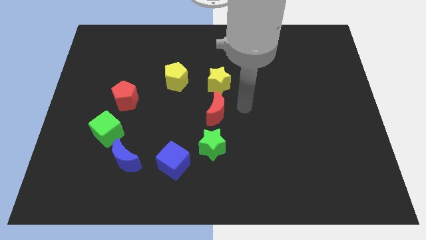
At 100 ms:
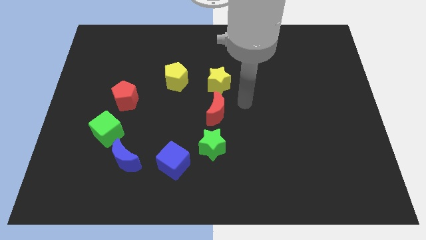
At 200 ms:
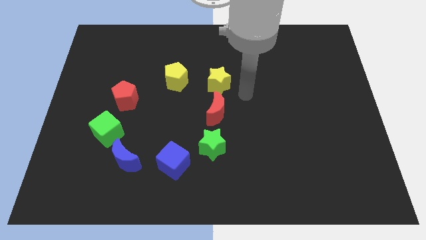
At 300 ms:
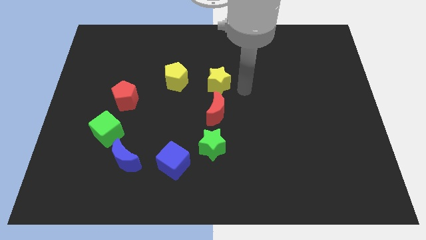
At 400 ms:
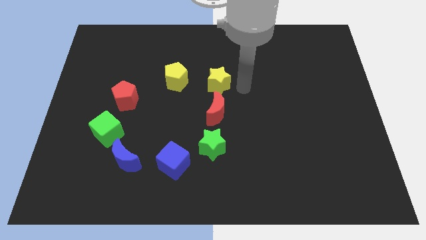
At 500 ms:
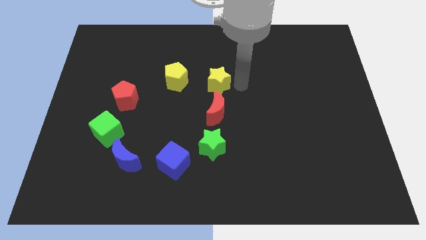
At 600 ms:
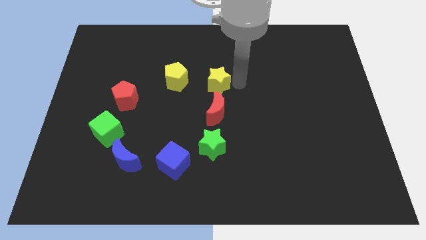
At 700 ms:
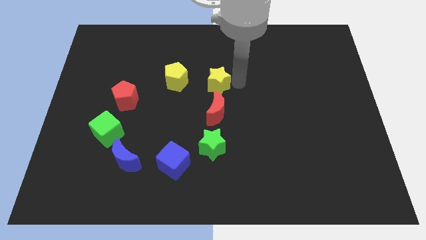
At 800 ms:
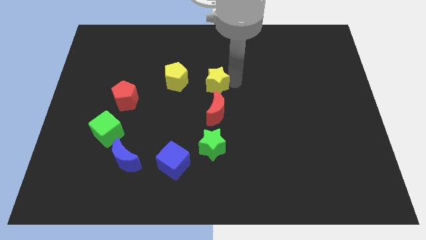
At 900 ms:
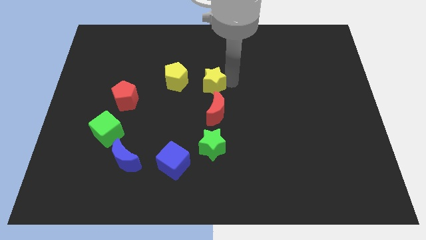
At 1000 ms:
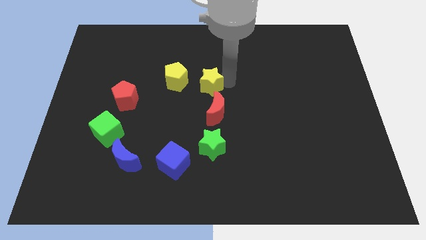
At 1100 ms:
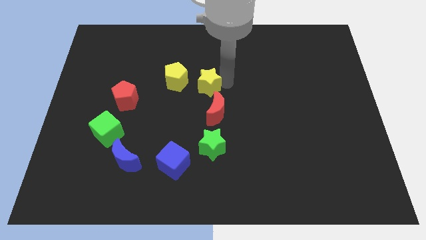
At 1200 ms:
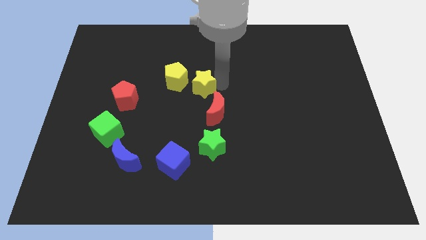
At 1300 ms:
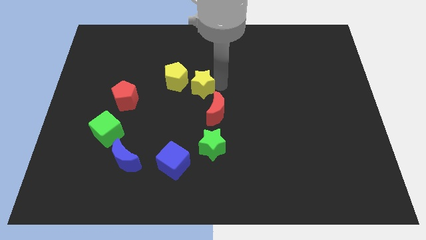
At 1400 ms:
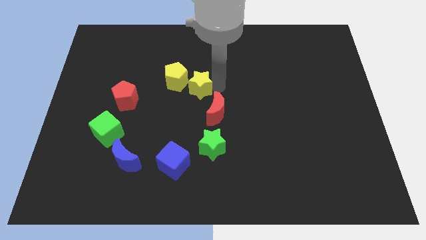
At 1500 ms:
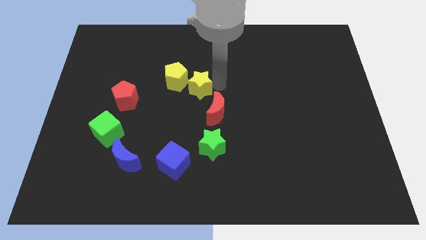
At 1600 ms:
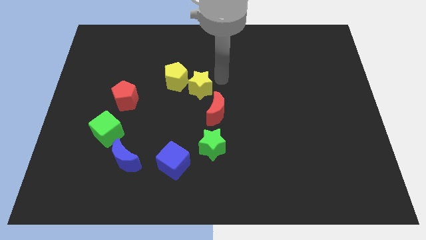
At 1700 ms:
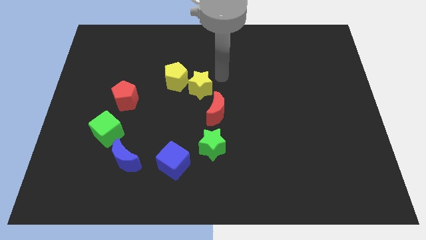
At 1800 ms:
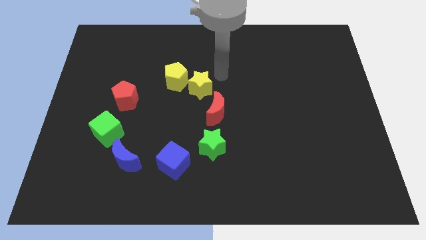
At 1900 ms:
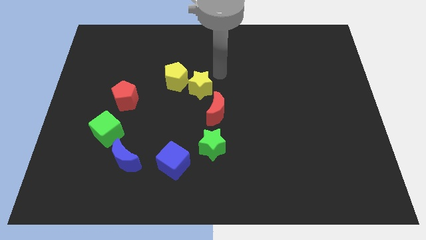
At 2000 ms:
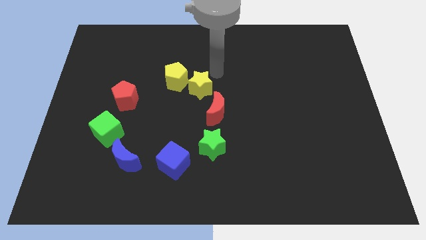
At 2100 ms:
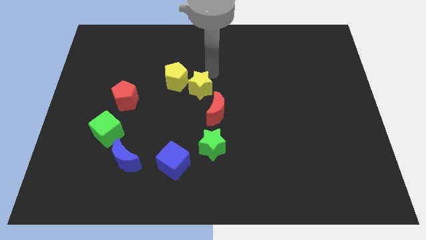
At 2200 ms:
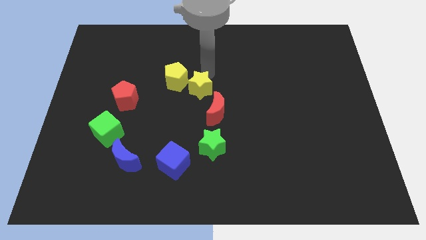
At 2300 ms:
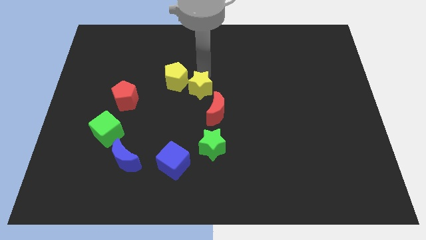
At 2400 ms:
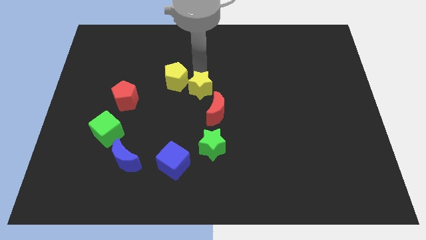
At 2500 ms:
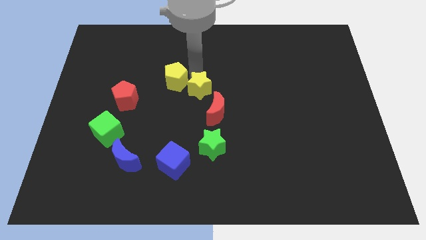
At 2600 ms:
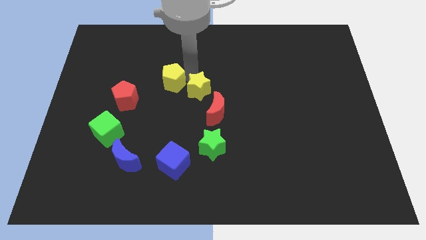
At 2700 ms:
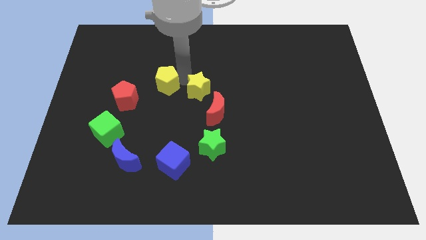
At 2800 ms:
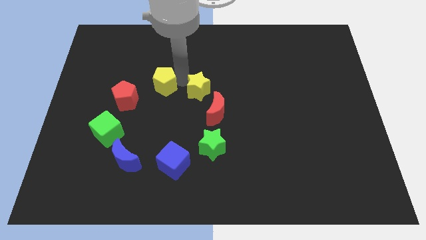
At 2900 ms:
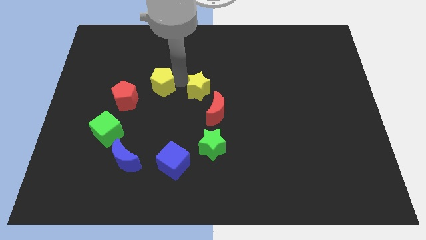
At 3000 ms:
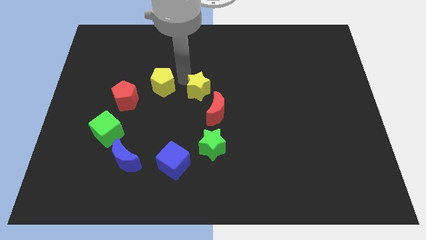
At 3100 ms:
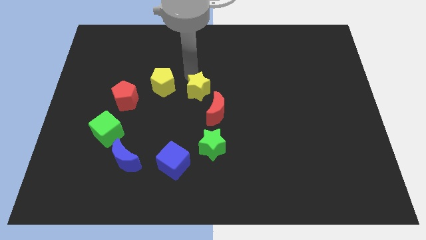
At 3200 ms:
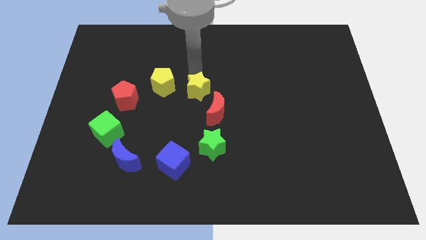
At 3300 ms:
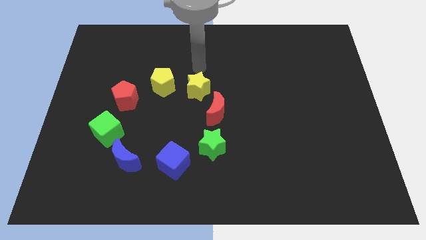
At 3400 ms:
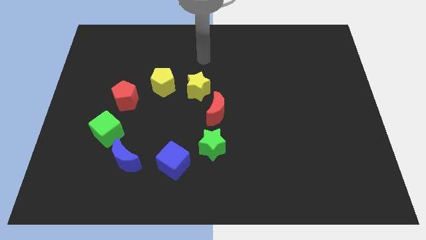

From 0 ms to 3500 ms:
adjust the yellow star to the circle right to the yellow pentagon

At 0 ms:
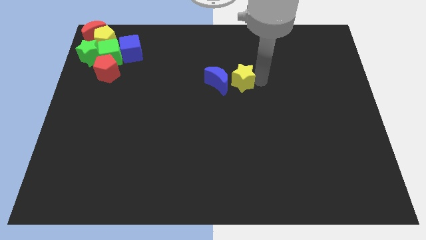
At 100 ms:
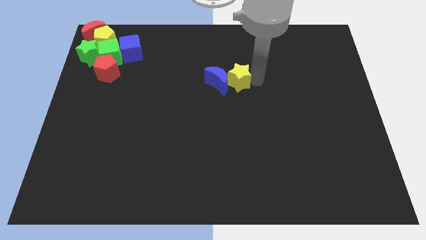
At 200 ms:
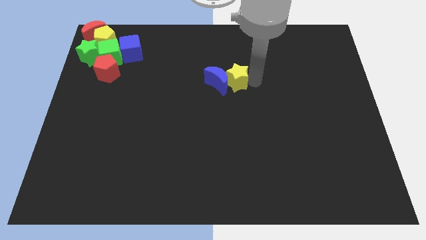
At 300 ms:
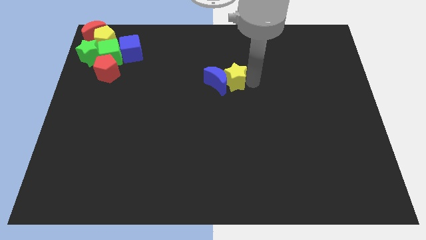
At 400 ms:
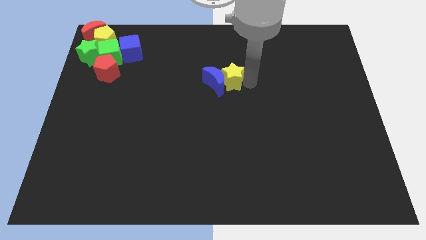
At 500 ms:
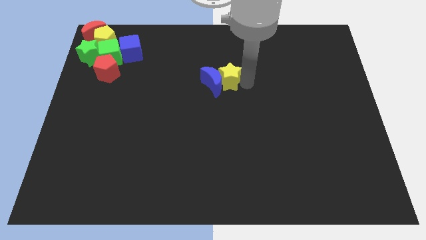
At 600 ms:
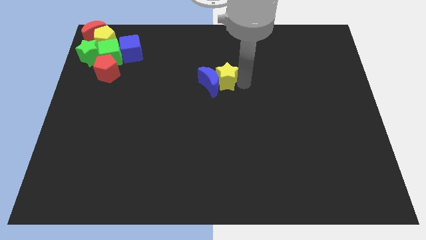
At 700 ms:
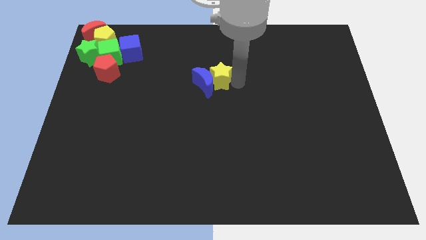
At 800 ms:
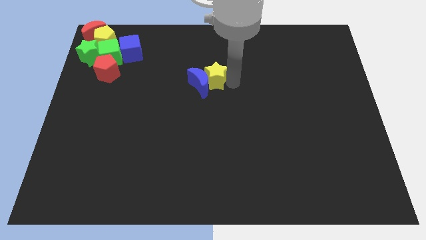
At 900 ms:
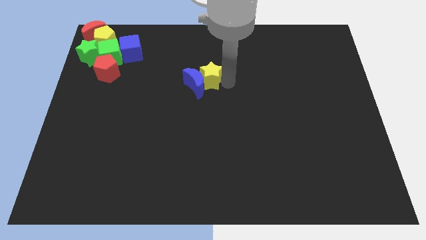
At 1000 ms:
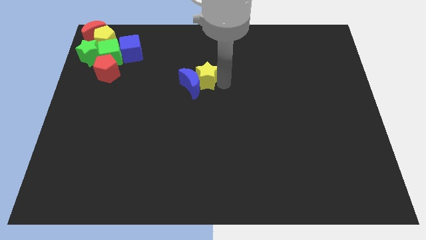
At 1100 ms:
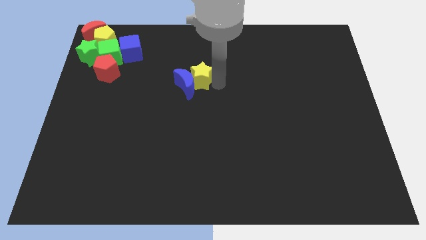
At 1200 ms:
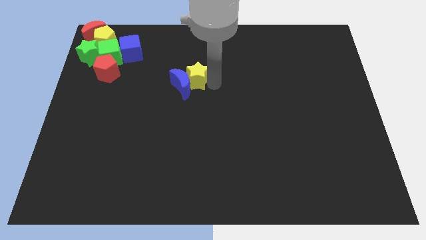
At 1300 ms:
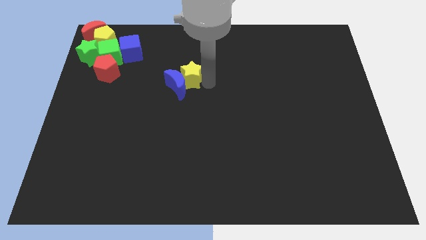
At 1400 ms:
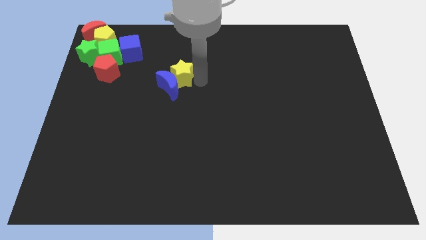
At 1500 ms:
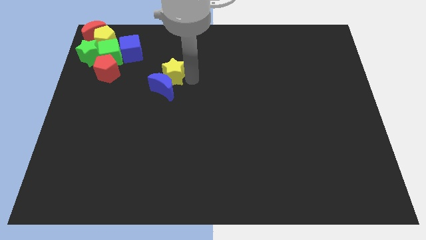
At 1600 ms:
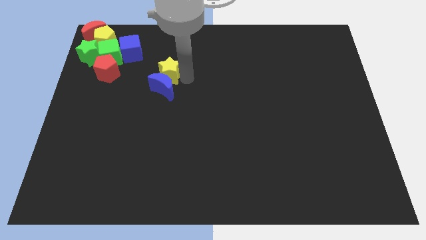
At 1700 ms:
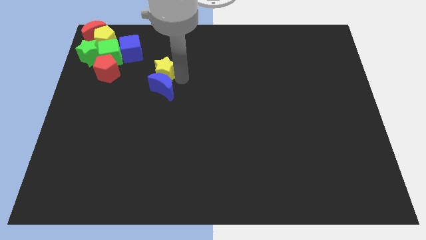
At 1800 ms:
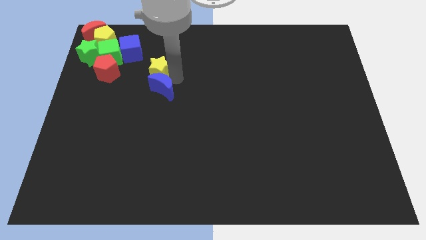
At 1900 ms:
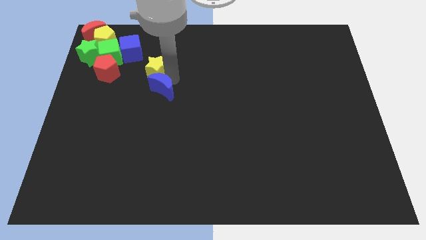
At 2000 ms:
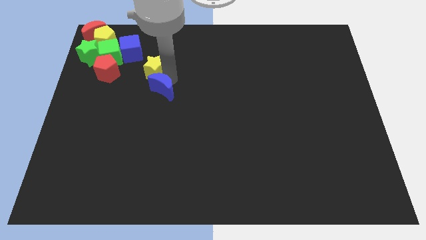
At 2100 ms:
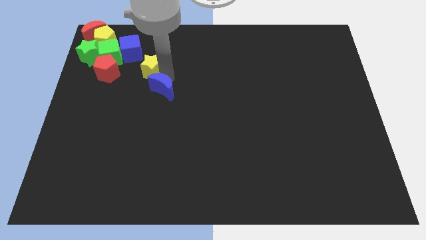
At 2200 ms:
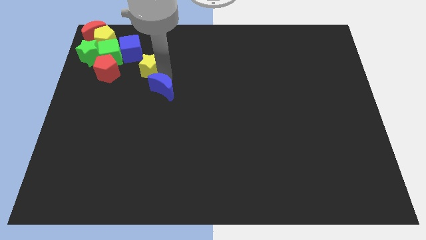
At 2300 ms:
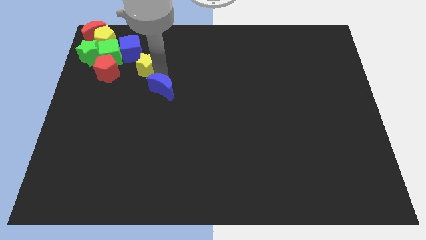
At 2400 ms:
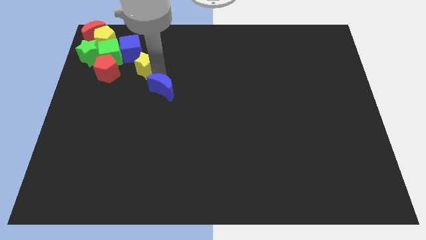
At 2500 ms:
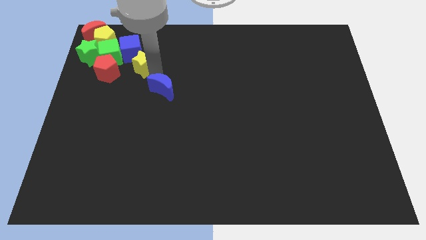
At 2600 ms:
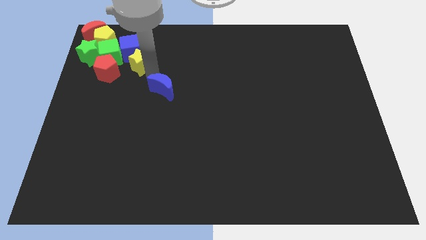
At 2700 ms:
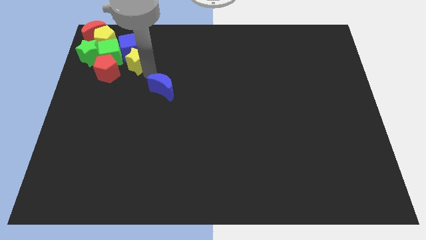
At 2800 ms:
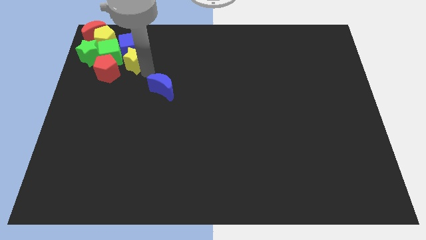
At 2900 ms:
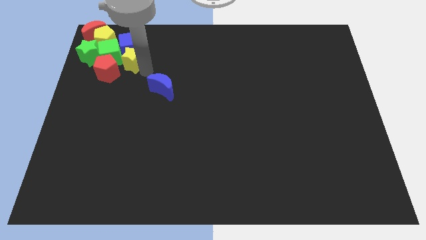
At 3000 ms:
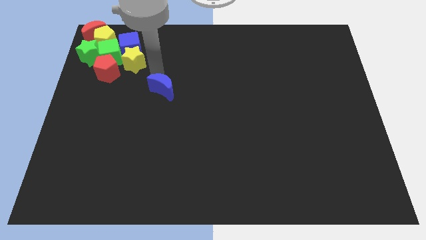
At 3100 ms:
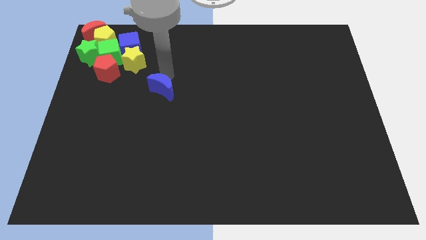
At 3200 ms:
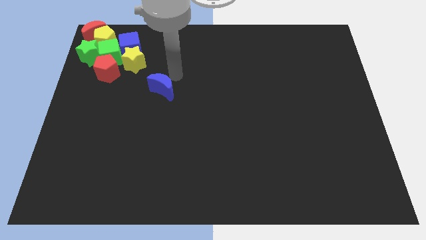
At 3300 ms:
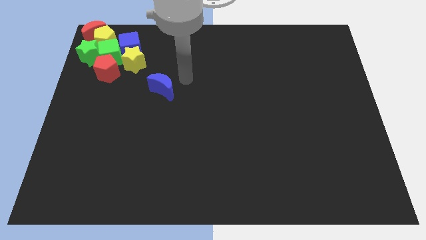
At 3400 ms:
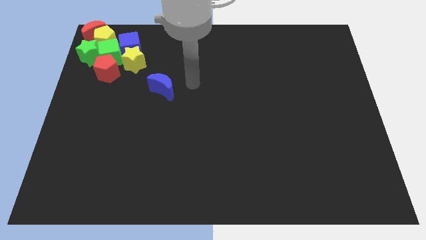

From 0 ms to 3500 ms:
move the yellow star into the group of blocks

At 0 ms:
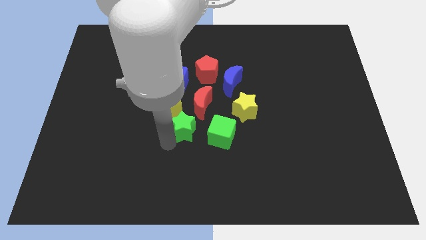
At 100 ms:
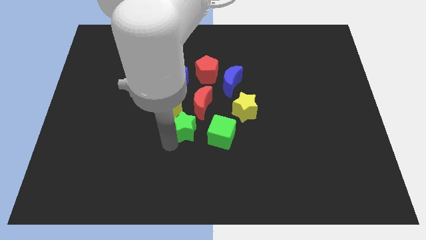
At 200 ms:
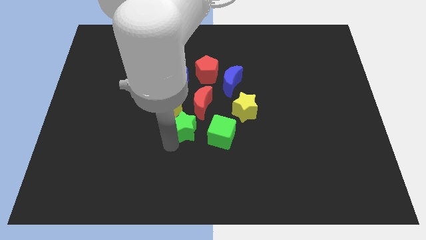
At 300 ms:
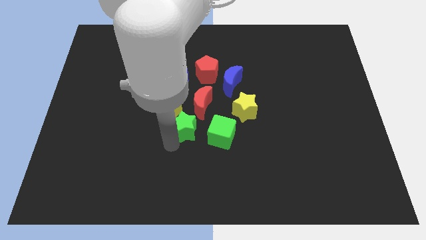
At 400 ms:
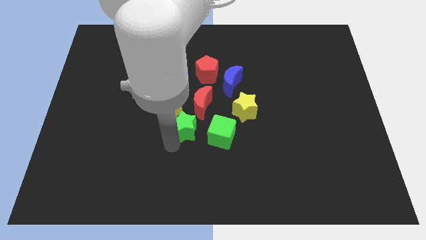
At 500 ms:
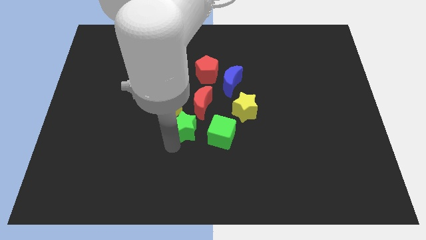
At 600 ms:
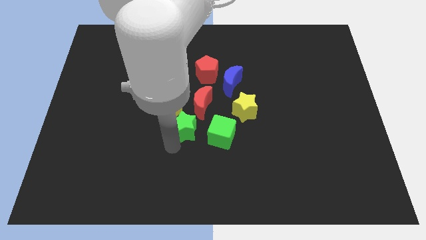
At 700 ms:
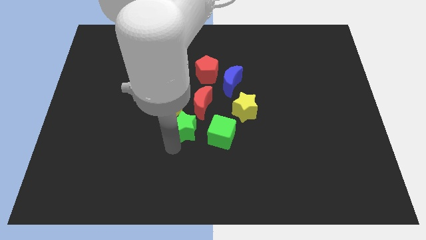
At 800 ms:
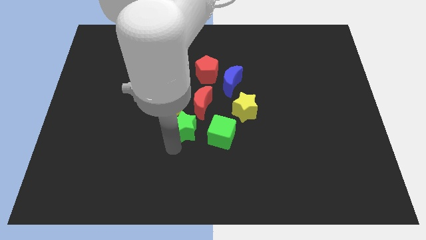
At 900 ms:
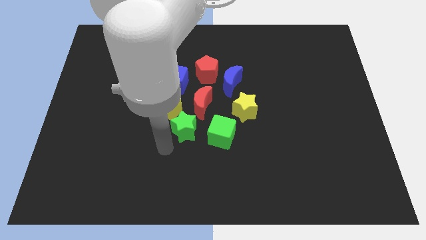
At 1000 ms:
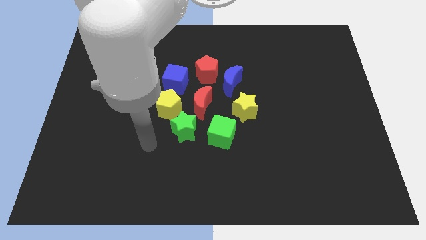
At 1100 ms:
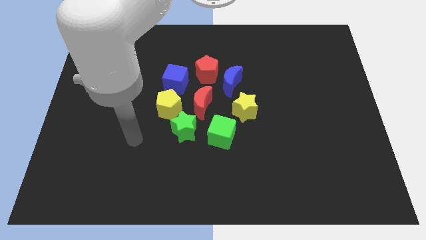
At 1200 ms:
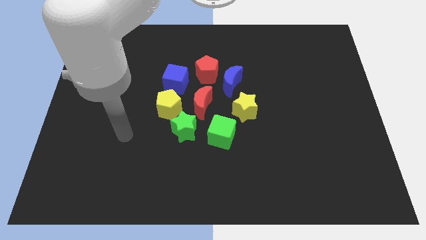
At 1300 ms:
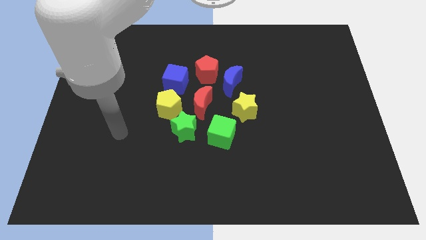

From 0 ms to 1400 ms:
slightly move the green star to the right of the yellow pentagon

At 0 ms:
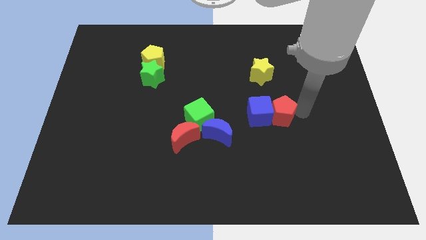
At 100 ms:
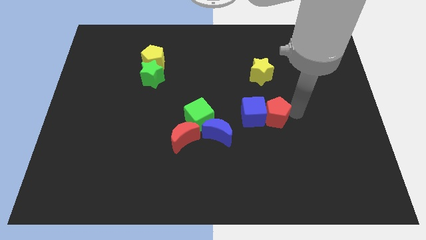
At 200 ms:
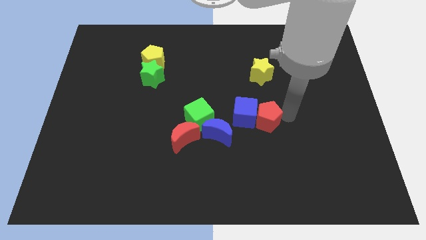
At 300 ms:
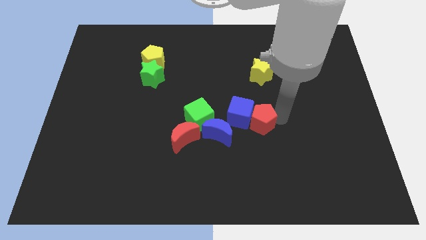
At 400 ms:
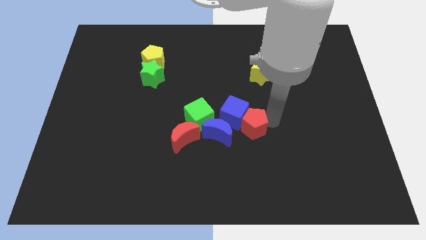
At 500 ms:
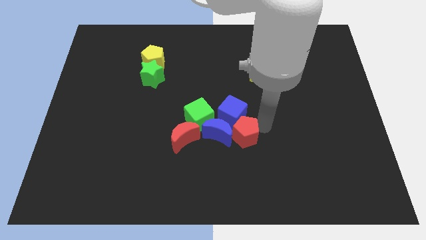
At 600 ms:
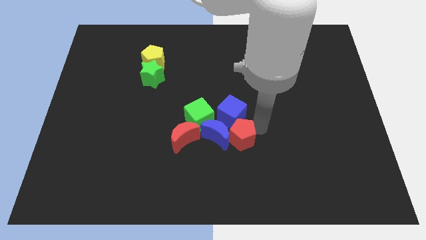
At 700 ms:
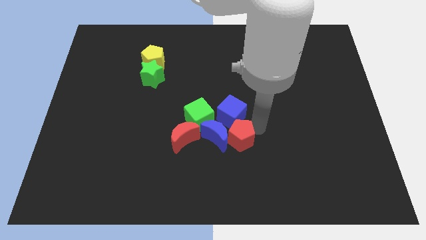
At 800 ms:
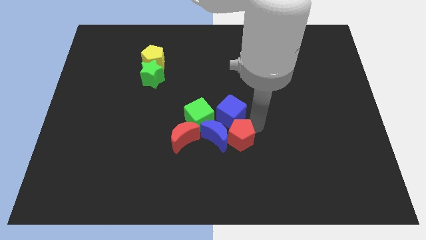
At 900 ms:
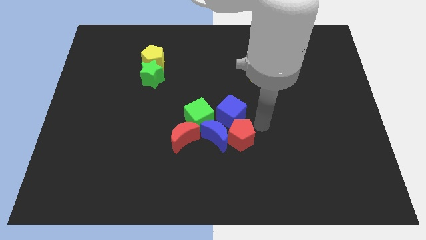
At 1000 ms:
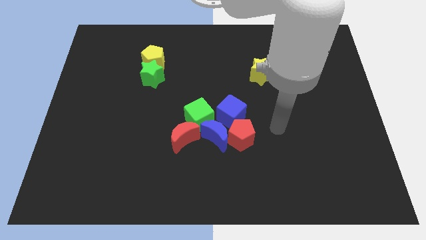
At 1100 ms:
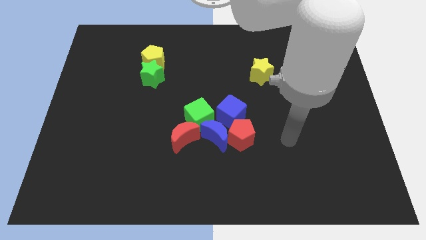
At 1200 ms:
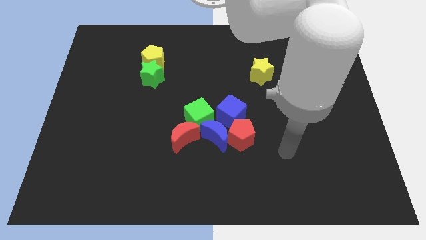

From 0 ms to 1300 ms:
push red pentagon and the blue cube towards the group of blocks
